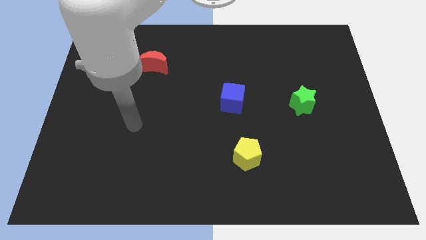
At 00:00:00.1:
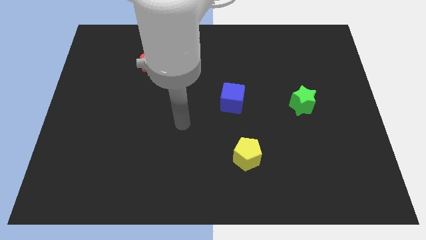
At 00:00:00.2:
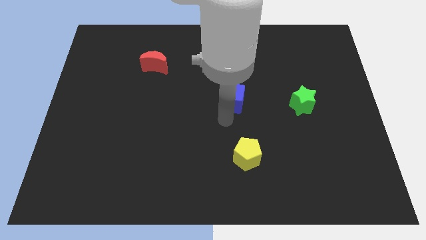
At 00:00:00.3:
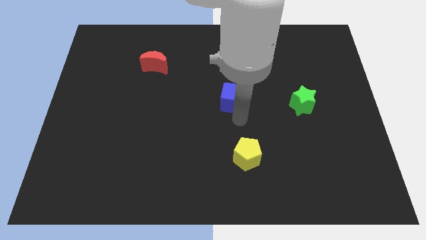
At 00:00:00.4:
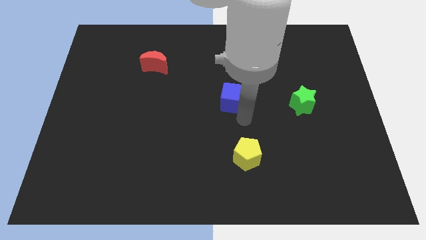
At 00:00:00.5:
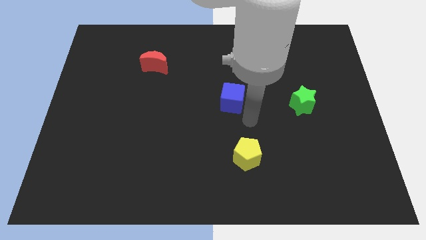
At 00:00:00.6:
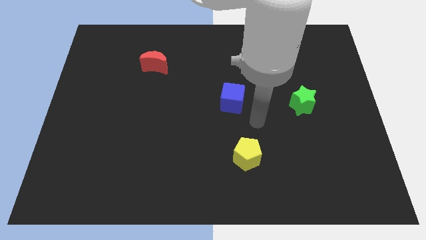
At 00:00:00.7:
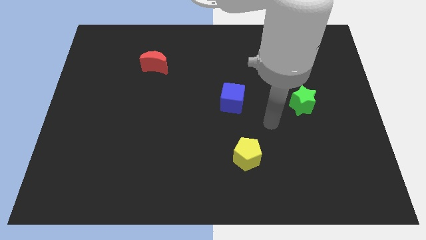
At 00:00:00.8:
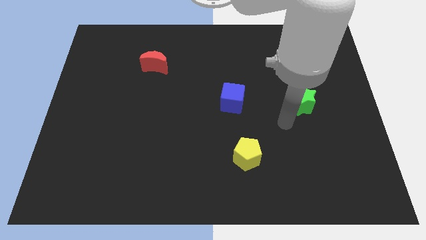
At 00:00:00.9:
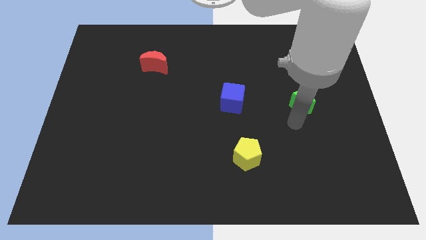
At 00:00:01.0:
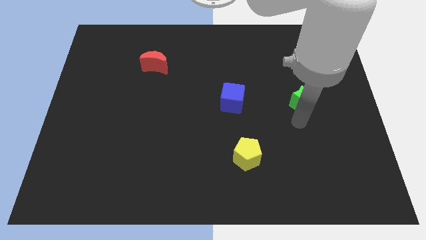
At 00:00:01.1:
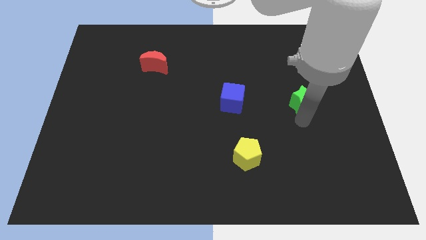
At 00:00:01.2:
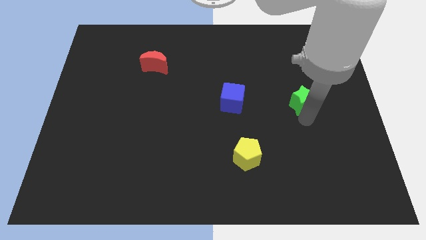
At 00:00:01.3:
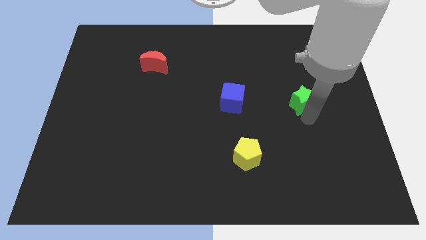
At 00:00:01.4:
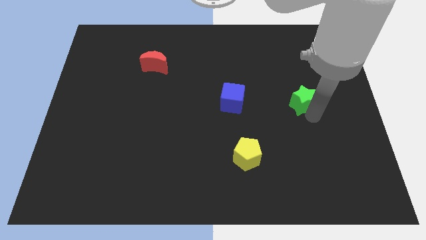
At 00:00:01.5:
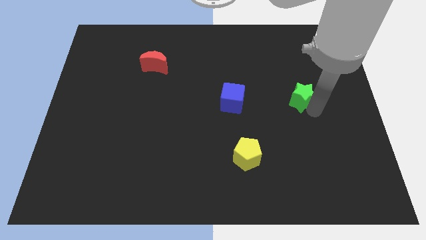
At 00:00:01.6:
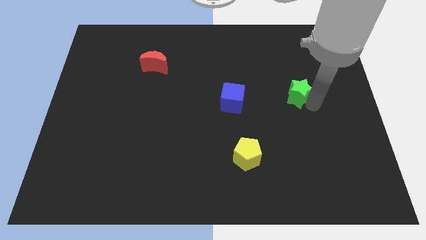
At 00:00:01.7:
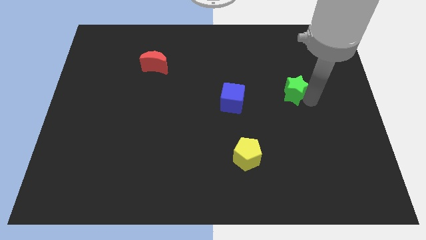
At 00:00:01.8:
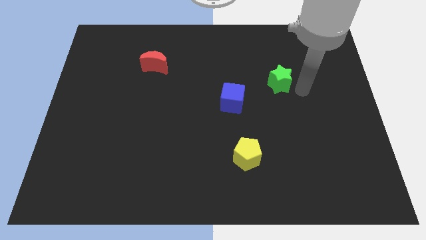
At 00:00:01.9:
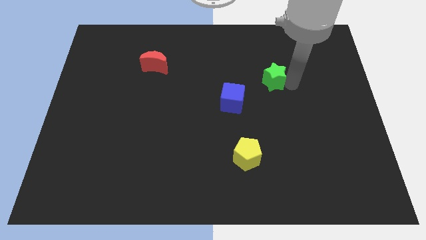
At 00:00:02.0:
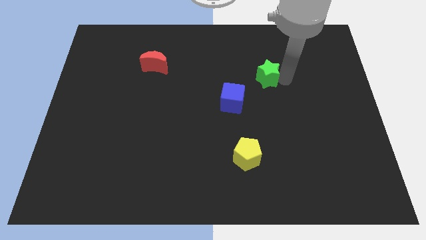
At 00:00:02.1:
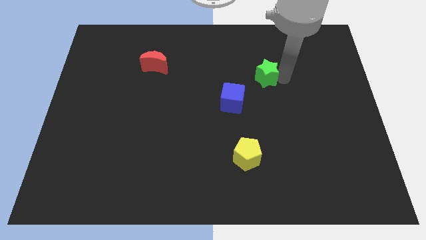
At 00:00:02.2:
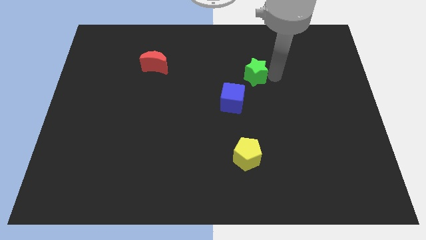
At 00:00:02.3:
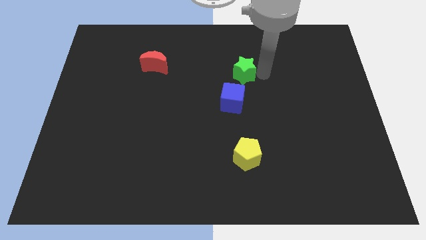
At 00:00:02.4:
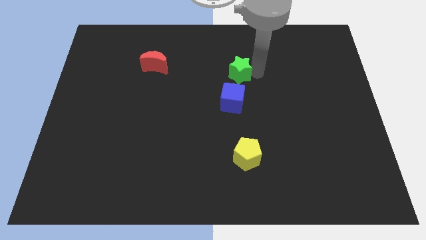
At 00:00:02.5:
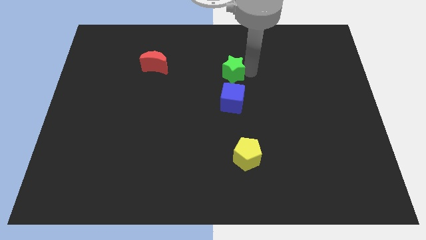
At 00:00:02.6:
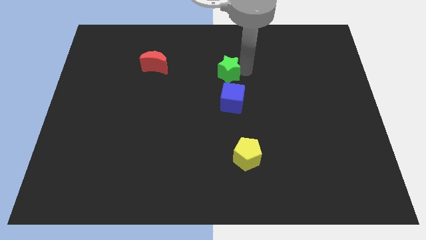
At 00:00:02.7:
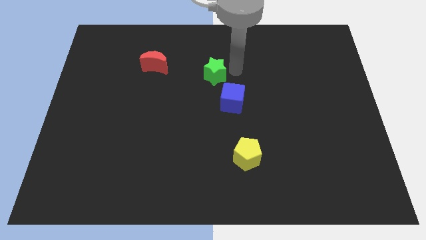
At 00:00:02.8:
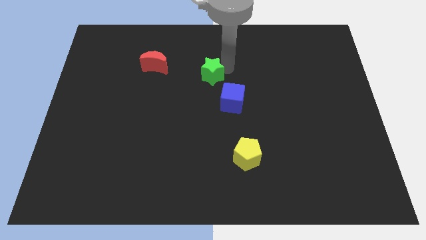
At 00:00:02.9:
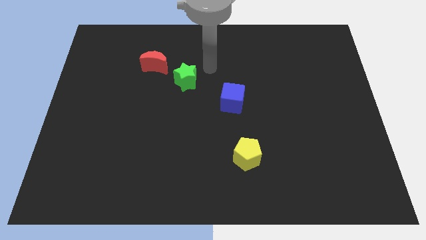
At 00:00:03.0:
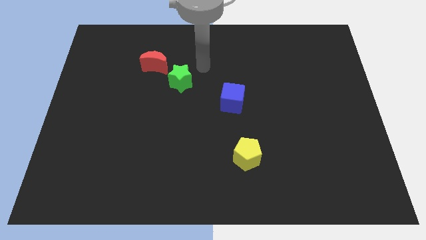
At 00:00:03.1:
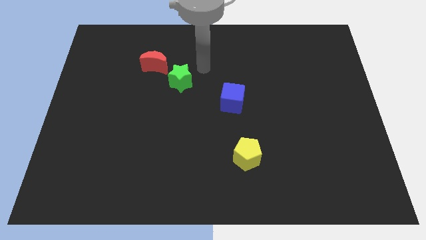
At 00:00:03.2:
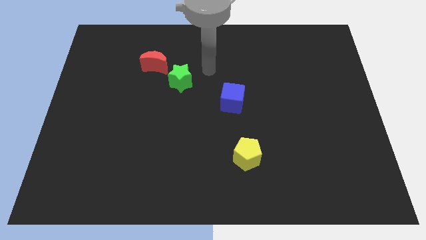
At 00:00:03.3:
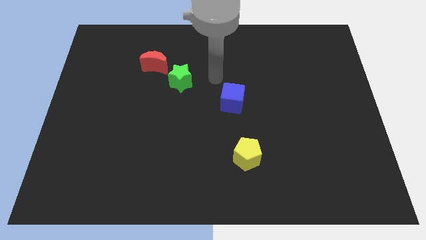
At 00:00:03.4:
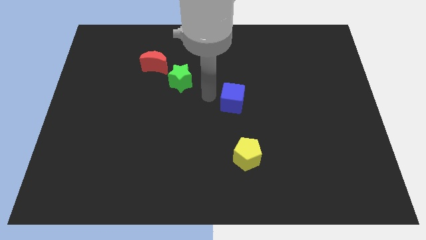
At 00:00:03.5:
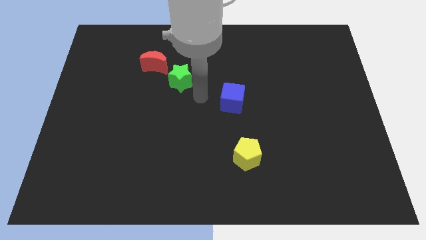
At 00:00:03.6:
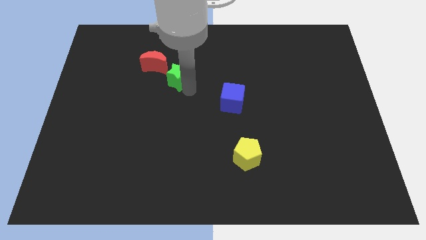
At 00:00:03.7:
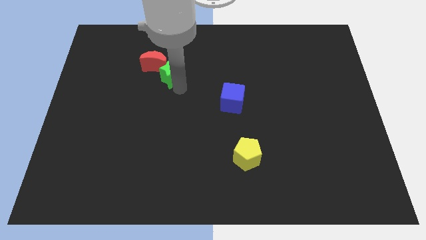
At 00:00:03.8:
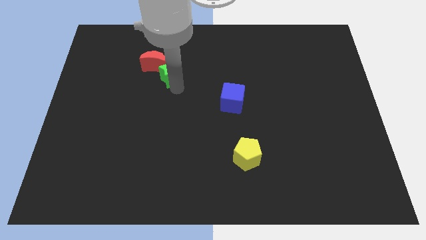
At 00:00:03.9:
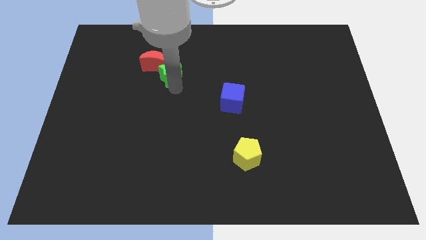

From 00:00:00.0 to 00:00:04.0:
put the green star close to the red block

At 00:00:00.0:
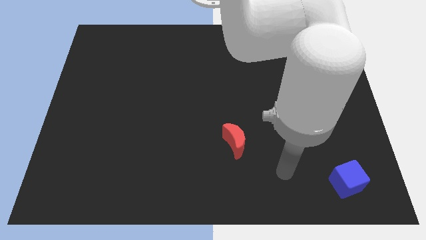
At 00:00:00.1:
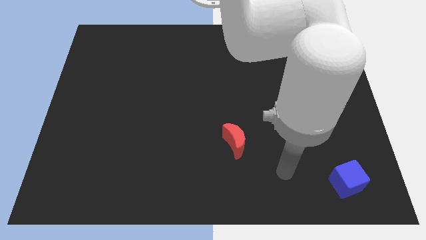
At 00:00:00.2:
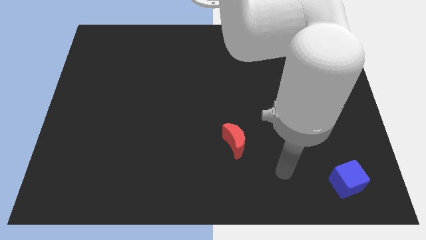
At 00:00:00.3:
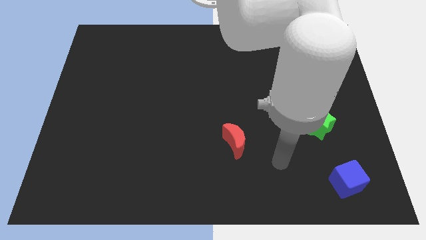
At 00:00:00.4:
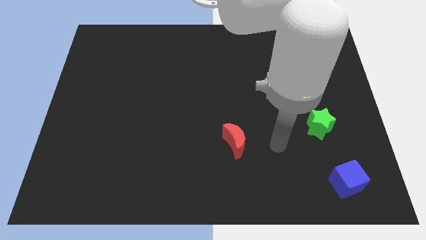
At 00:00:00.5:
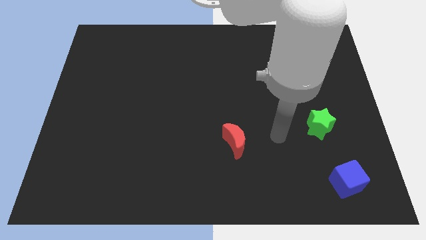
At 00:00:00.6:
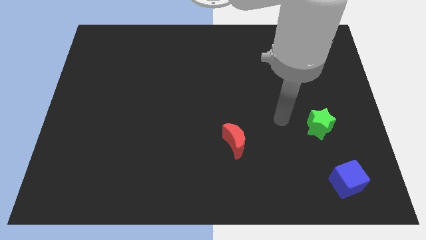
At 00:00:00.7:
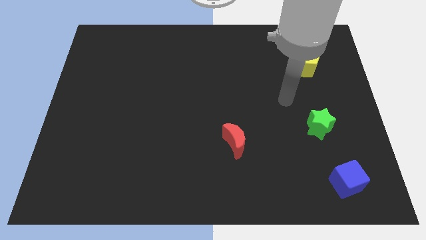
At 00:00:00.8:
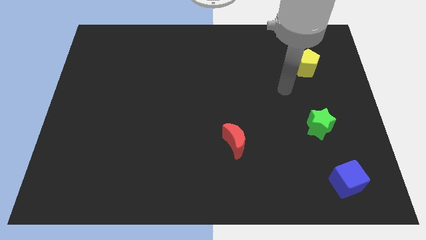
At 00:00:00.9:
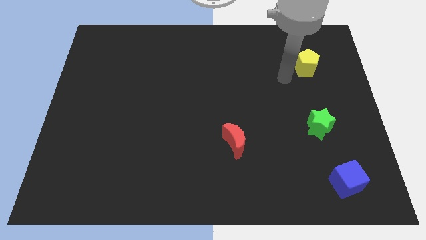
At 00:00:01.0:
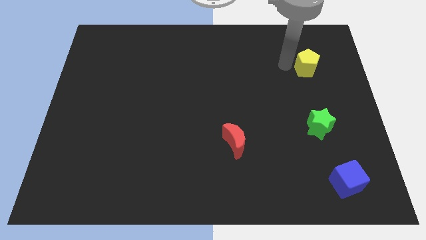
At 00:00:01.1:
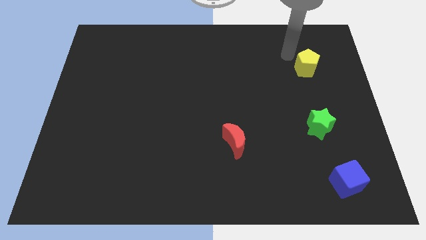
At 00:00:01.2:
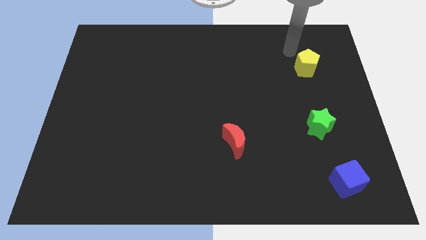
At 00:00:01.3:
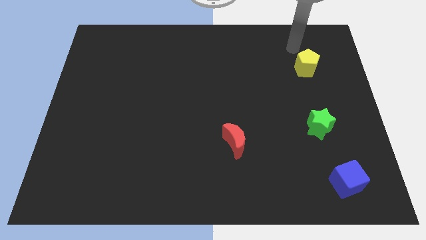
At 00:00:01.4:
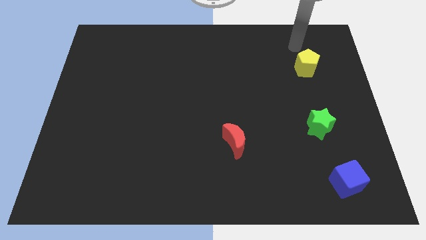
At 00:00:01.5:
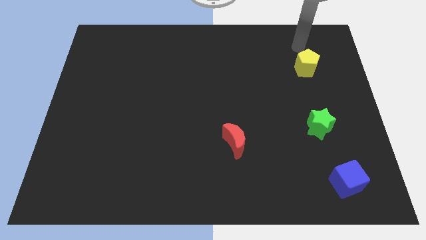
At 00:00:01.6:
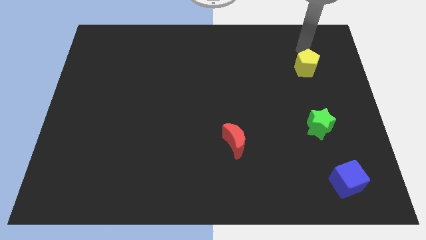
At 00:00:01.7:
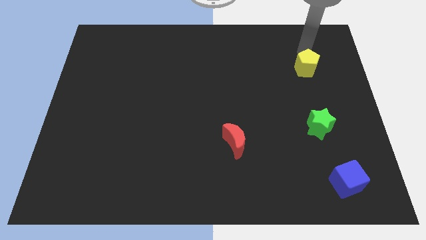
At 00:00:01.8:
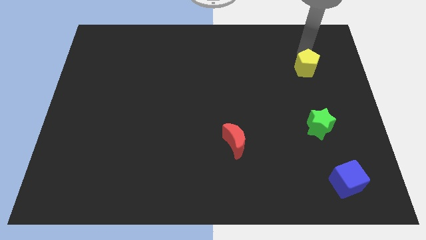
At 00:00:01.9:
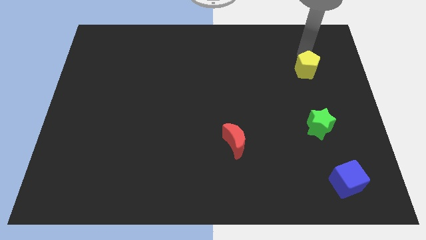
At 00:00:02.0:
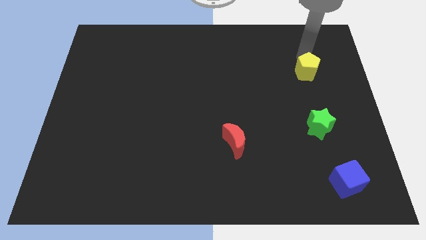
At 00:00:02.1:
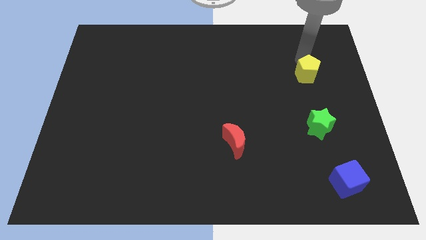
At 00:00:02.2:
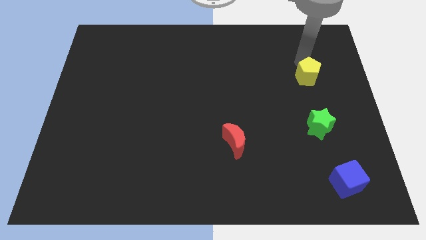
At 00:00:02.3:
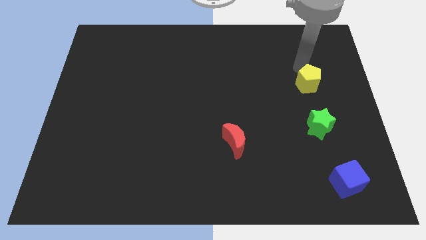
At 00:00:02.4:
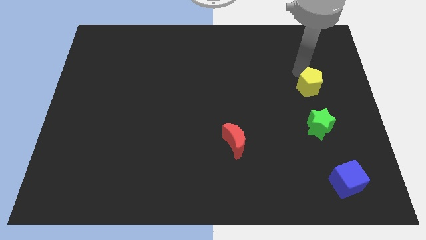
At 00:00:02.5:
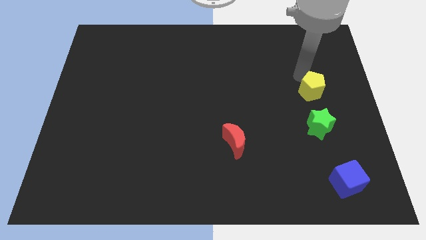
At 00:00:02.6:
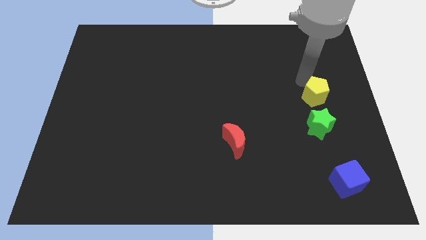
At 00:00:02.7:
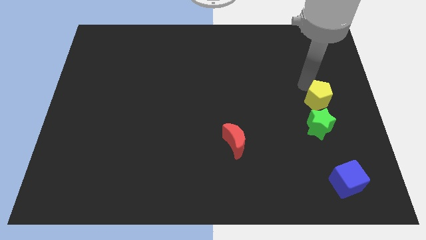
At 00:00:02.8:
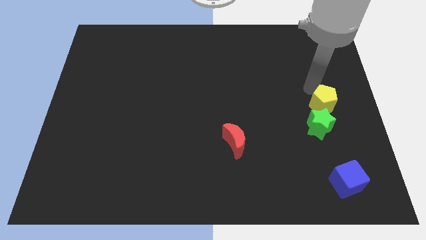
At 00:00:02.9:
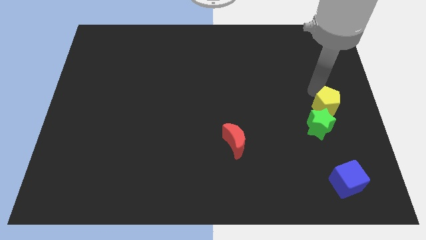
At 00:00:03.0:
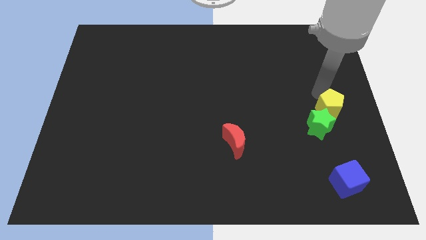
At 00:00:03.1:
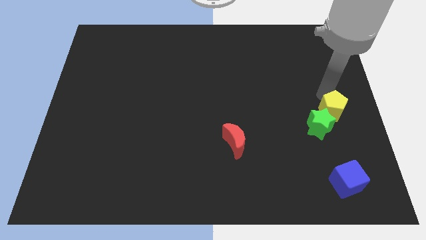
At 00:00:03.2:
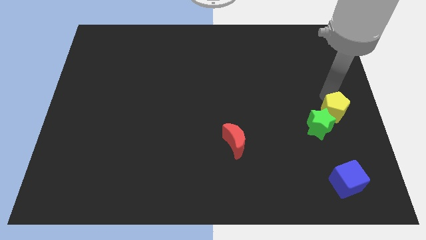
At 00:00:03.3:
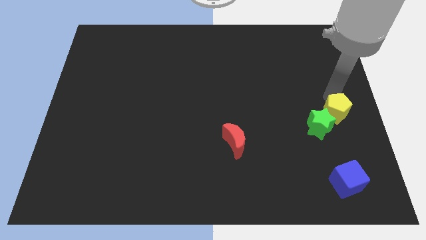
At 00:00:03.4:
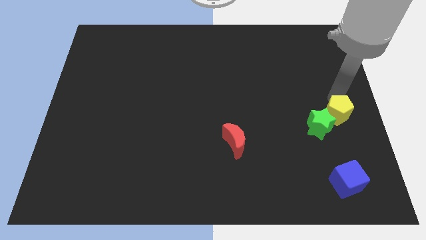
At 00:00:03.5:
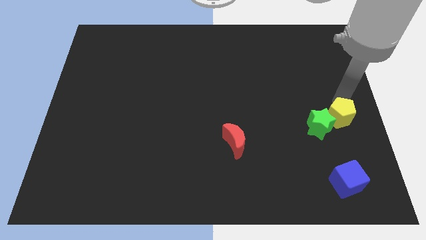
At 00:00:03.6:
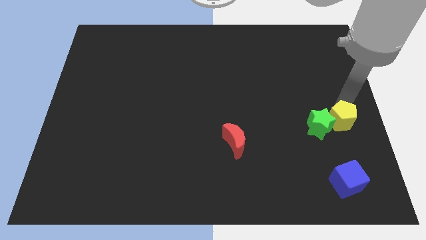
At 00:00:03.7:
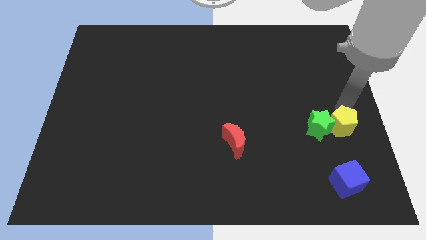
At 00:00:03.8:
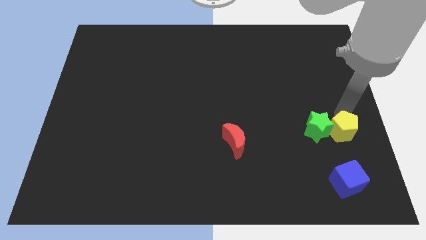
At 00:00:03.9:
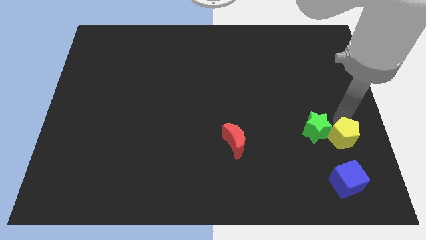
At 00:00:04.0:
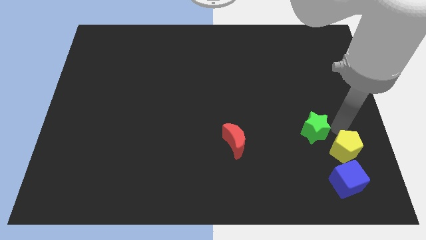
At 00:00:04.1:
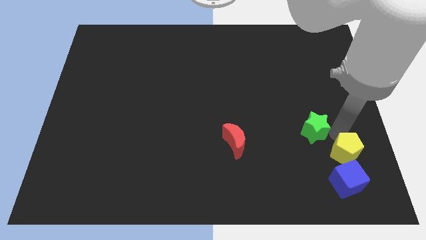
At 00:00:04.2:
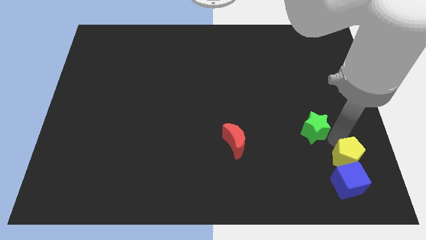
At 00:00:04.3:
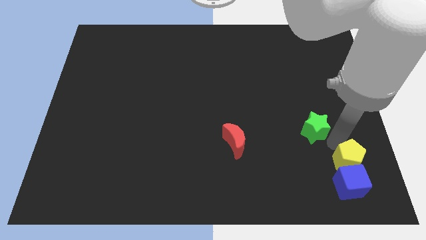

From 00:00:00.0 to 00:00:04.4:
slide the yellow pentagon next to the cube
